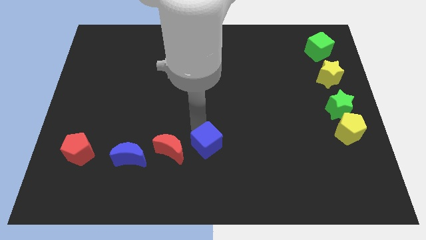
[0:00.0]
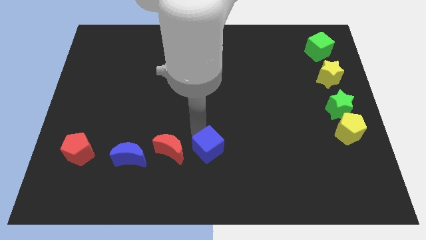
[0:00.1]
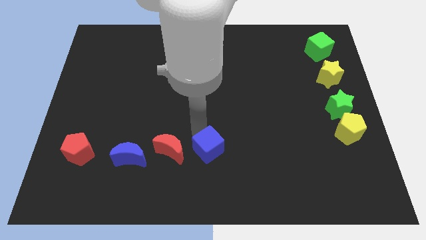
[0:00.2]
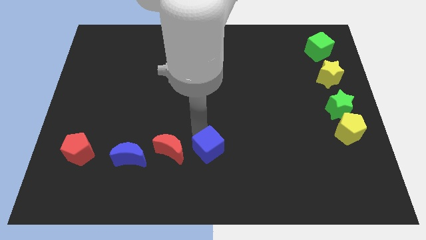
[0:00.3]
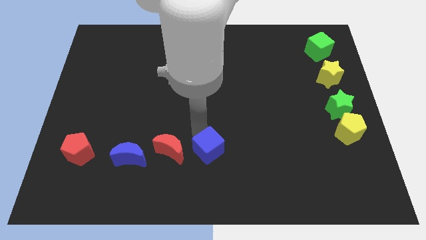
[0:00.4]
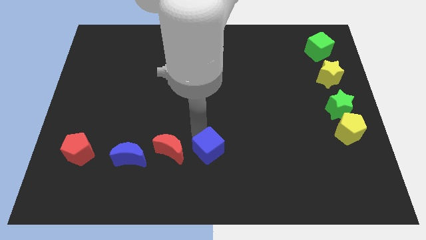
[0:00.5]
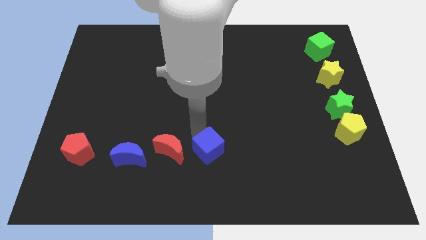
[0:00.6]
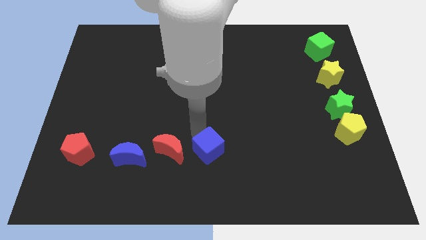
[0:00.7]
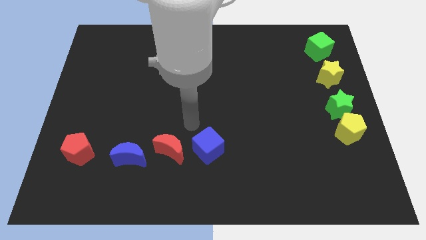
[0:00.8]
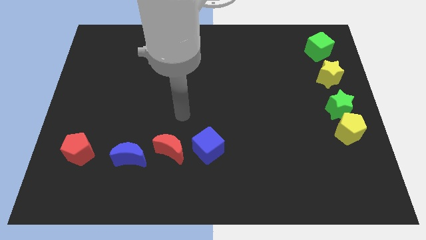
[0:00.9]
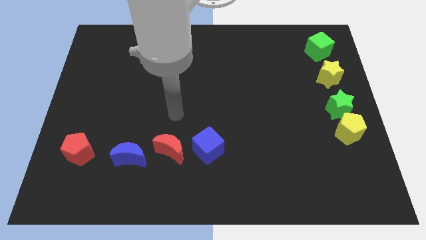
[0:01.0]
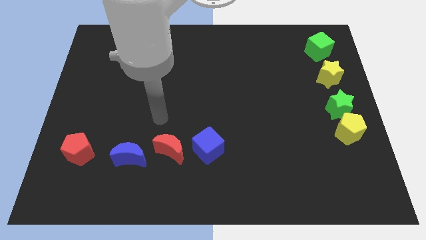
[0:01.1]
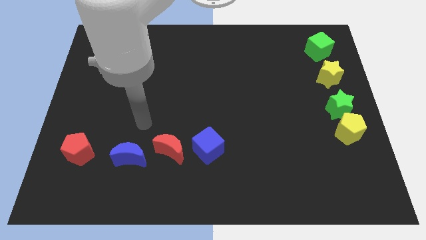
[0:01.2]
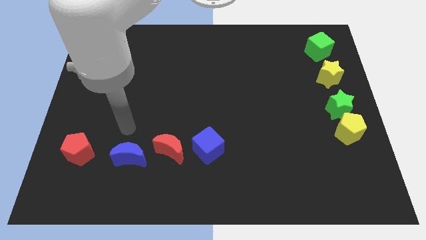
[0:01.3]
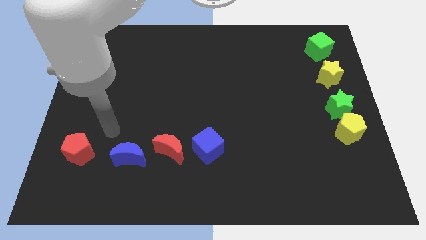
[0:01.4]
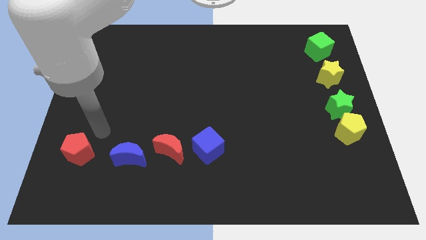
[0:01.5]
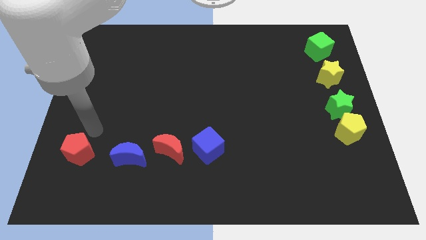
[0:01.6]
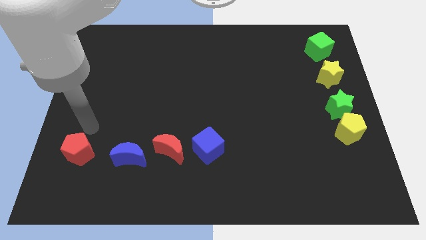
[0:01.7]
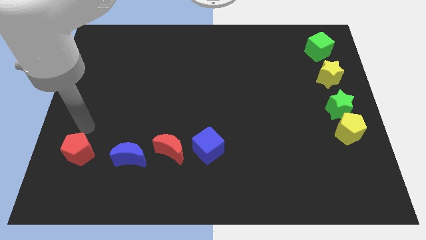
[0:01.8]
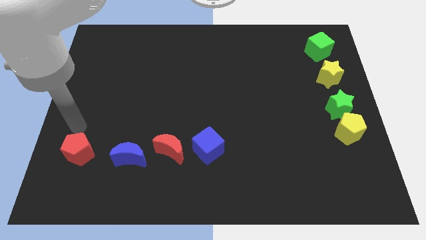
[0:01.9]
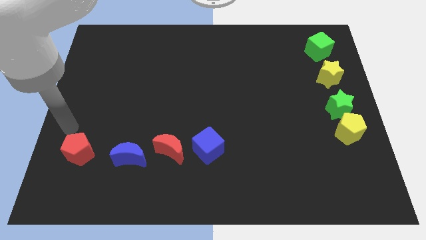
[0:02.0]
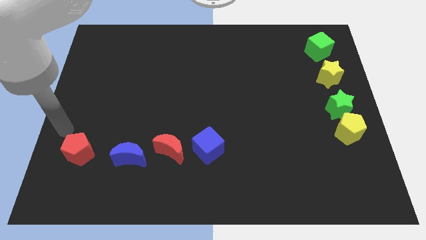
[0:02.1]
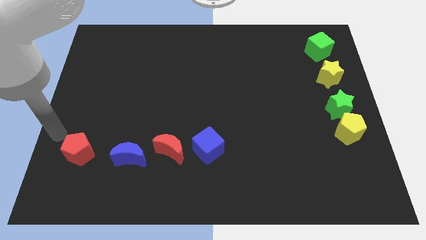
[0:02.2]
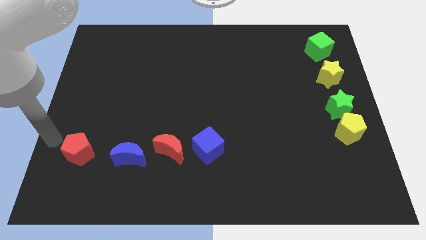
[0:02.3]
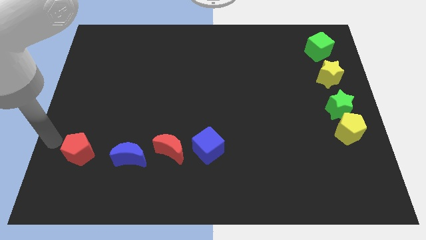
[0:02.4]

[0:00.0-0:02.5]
slightly push the blue cube right to the red moon

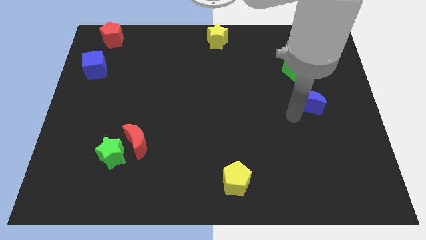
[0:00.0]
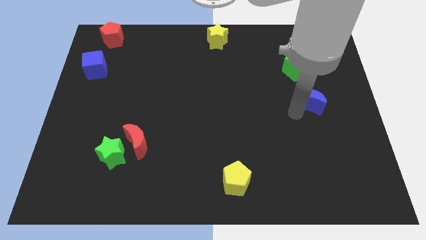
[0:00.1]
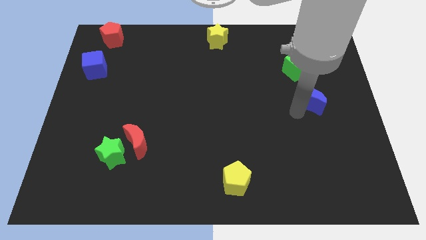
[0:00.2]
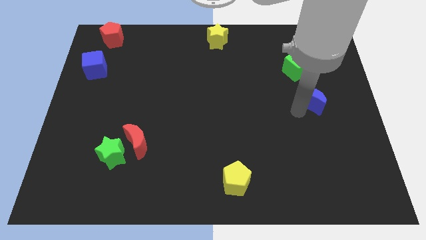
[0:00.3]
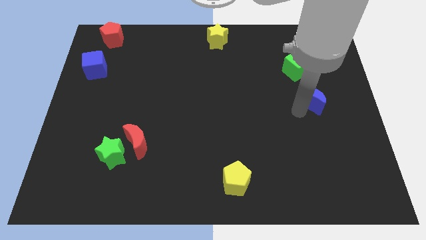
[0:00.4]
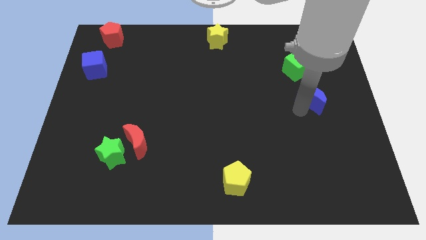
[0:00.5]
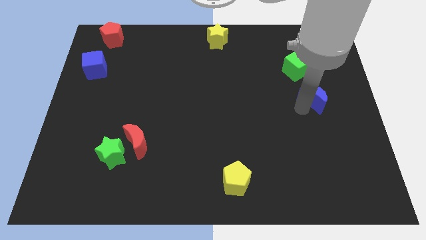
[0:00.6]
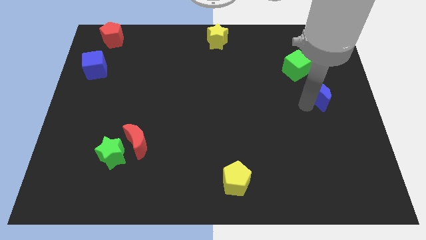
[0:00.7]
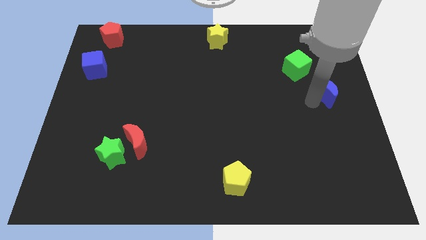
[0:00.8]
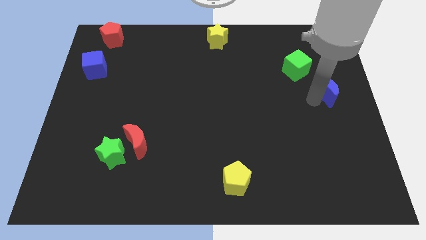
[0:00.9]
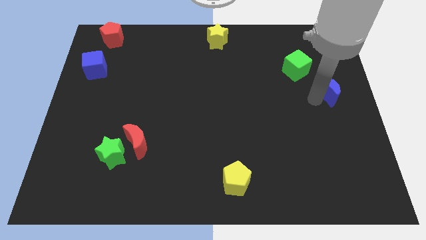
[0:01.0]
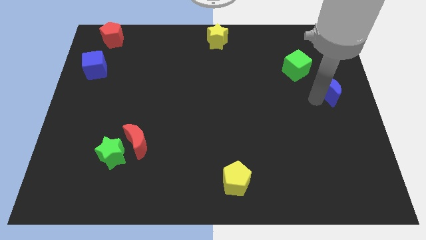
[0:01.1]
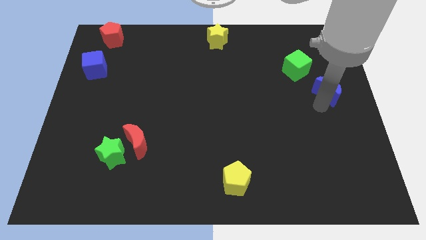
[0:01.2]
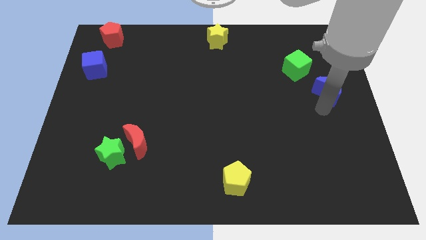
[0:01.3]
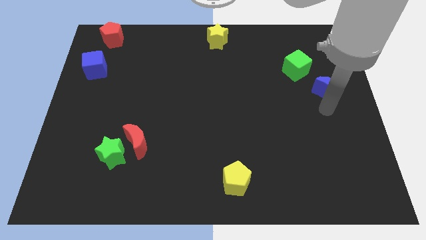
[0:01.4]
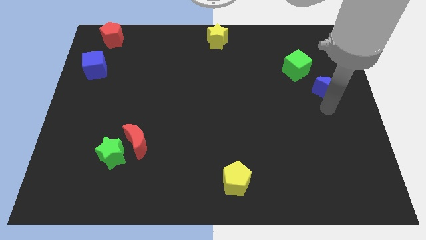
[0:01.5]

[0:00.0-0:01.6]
move the blue crescent to the bottom of the green cube

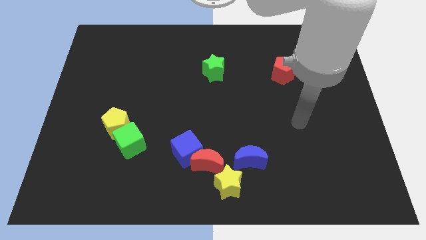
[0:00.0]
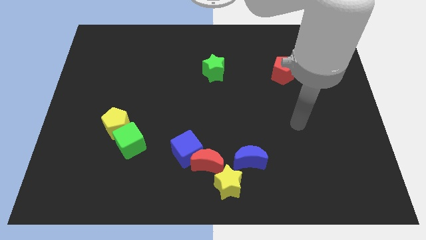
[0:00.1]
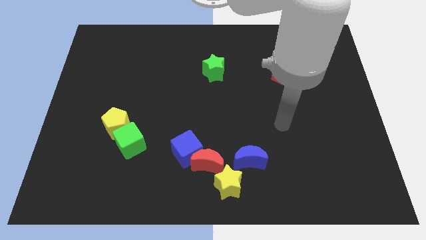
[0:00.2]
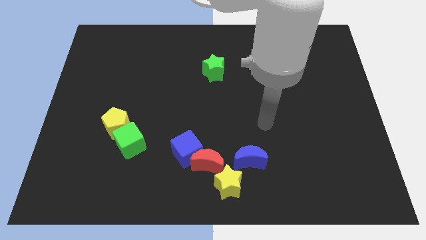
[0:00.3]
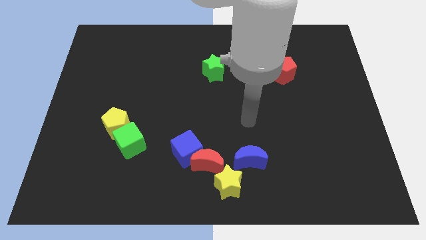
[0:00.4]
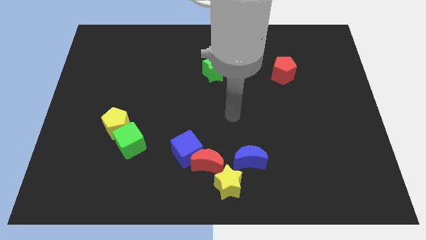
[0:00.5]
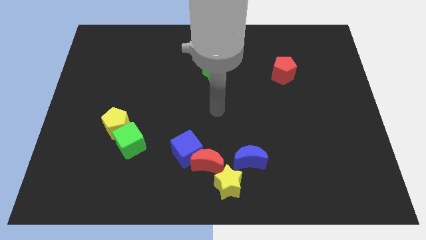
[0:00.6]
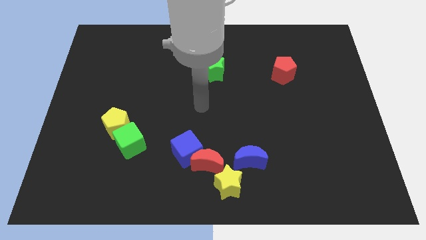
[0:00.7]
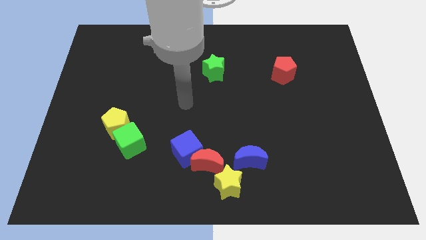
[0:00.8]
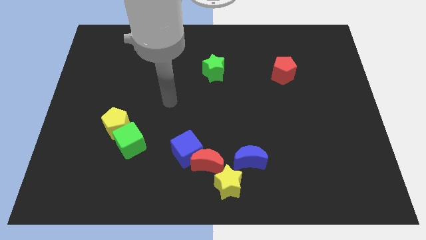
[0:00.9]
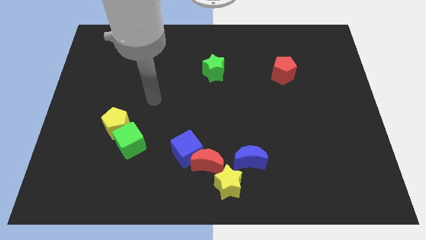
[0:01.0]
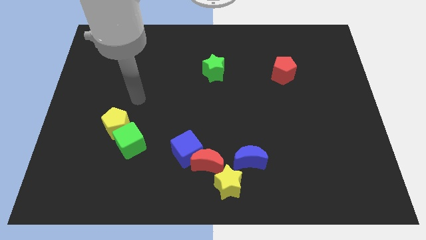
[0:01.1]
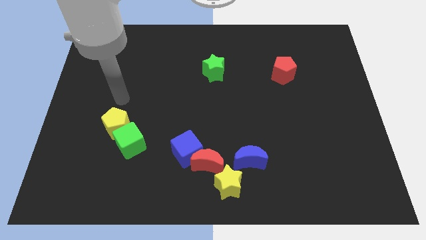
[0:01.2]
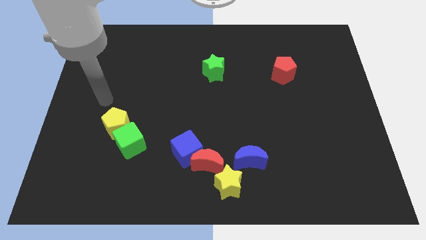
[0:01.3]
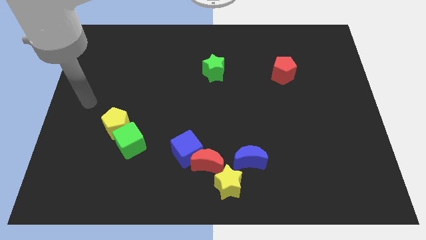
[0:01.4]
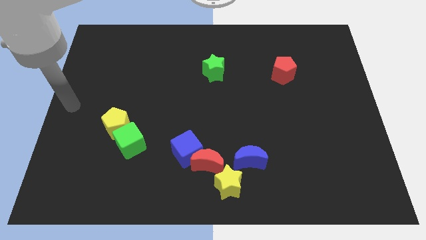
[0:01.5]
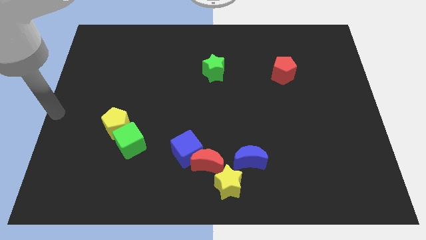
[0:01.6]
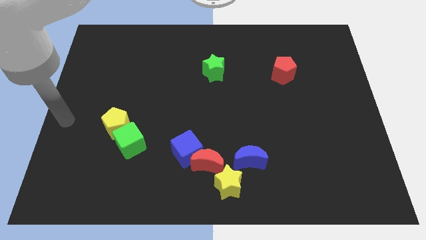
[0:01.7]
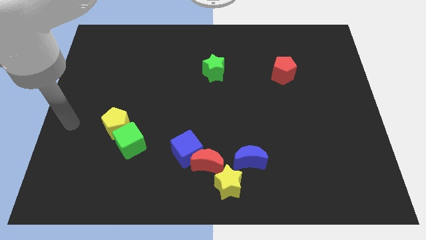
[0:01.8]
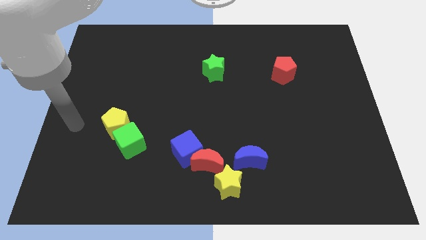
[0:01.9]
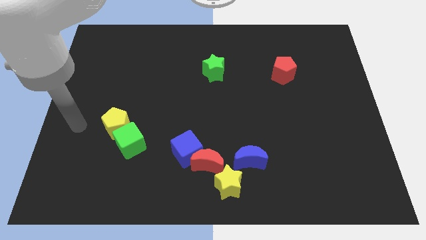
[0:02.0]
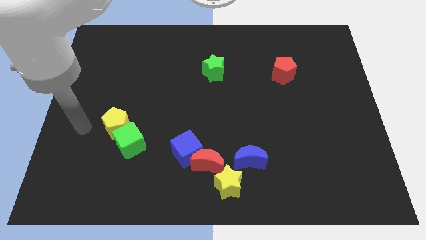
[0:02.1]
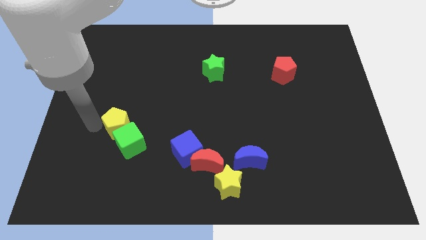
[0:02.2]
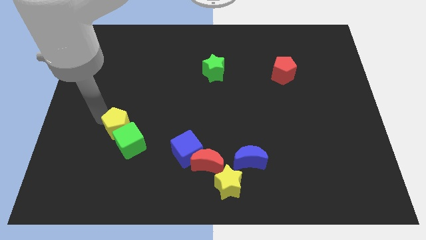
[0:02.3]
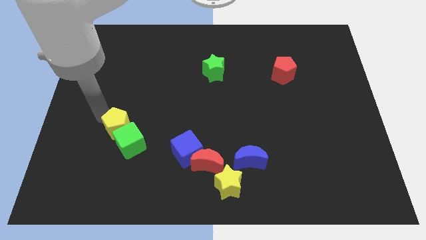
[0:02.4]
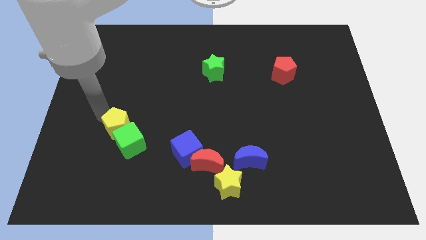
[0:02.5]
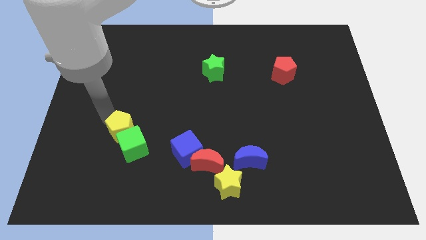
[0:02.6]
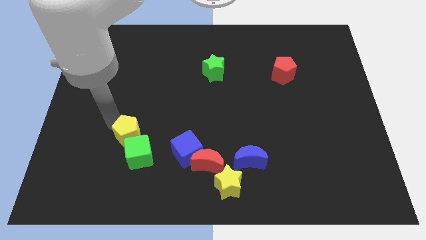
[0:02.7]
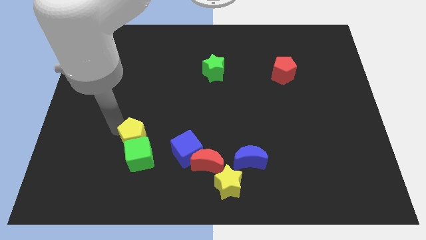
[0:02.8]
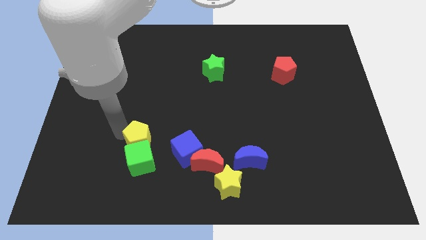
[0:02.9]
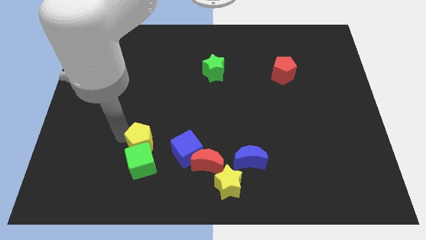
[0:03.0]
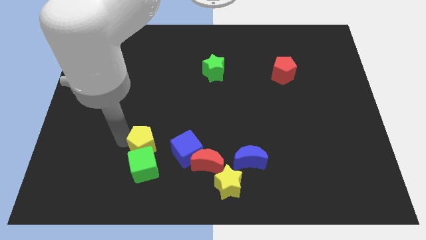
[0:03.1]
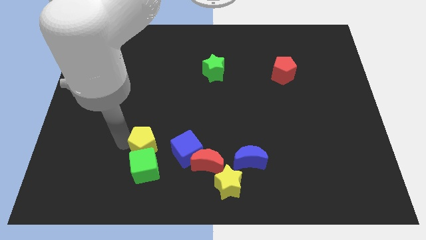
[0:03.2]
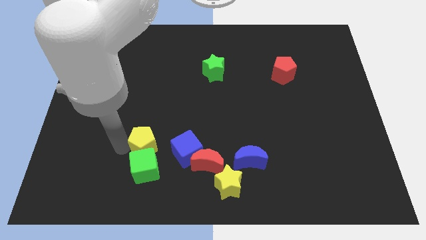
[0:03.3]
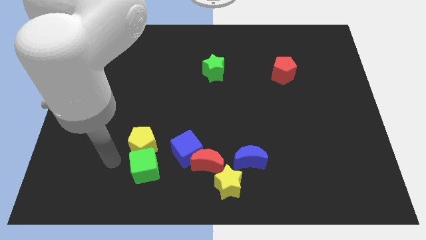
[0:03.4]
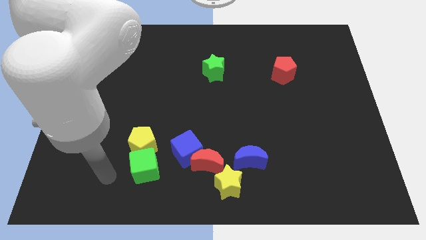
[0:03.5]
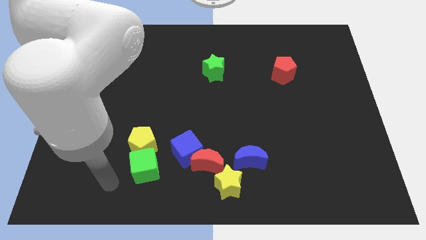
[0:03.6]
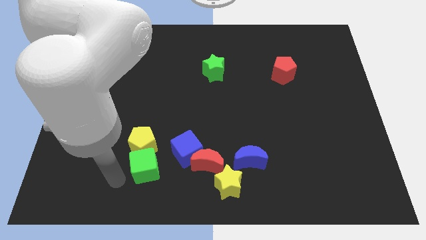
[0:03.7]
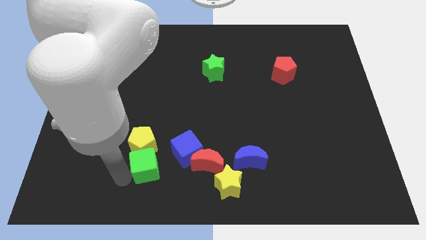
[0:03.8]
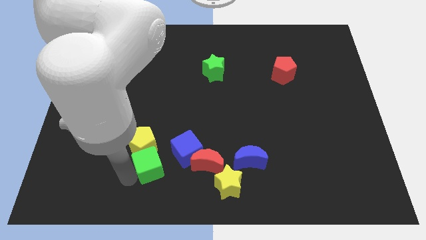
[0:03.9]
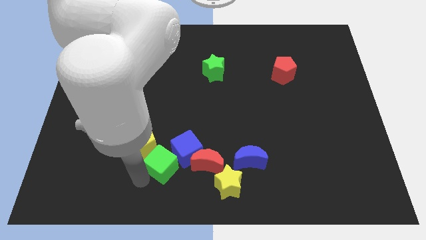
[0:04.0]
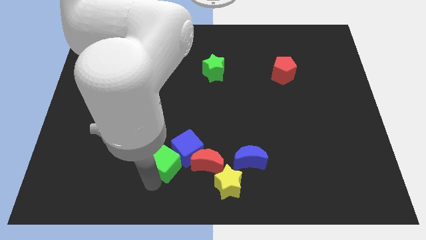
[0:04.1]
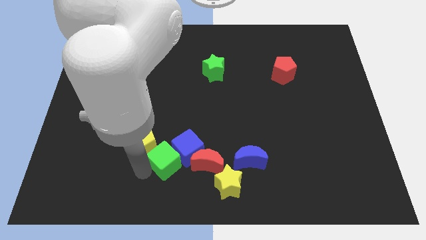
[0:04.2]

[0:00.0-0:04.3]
push the green cube into the blue cube

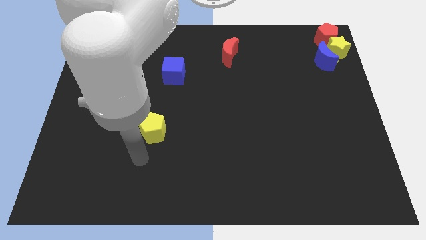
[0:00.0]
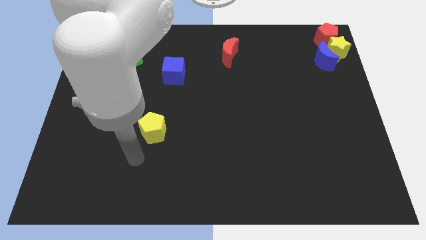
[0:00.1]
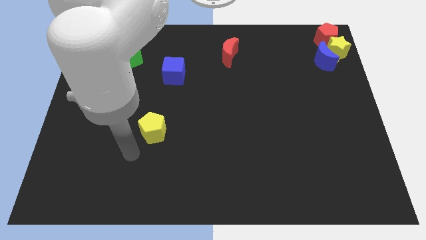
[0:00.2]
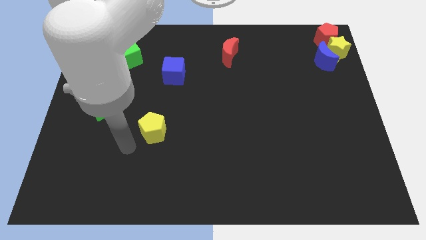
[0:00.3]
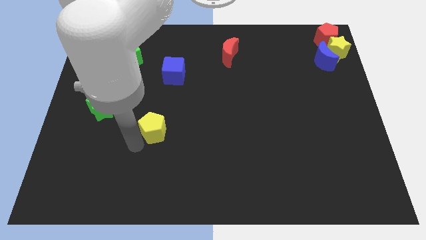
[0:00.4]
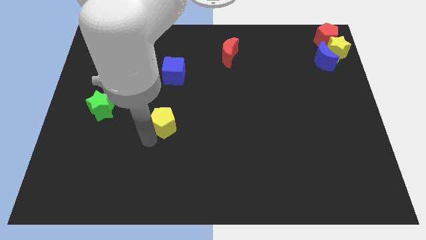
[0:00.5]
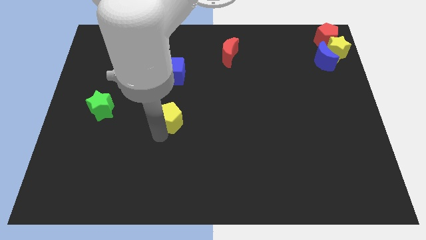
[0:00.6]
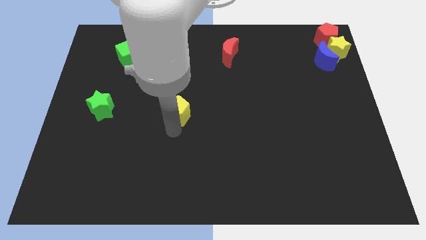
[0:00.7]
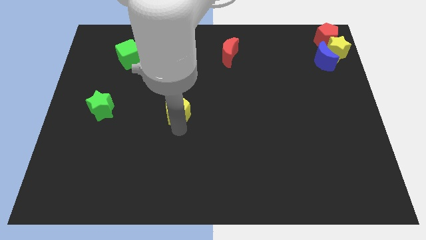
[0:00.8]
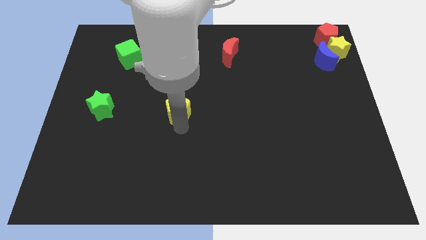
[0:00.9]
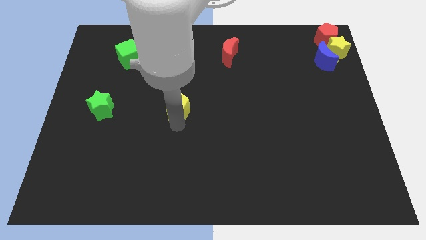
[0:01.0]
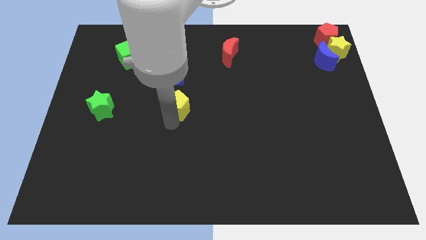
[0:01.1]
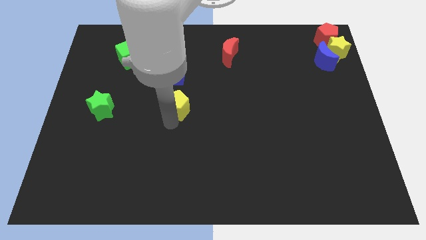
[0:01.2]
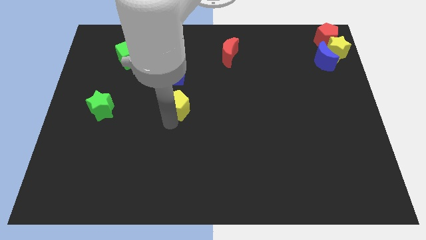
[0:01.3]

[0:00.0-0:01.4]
put the yellow pentagon vertically below the blue cube
